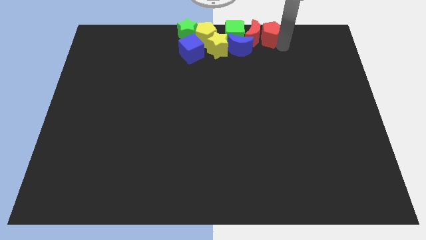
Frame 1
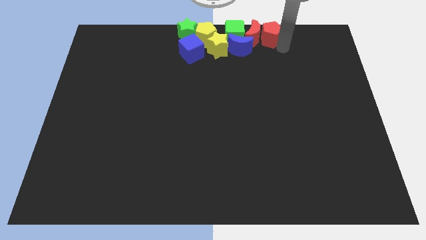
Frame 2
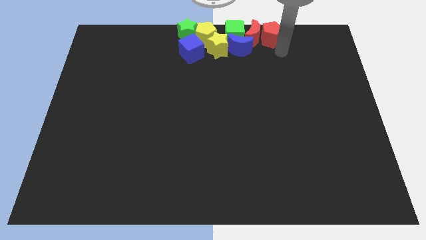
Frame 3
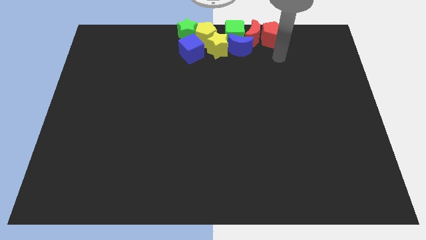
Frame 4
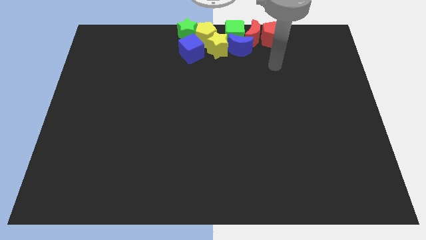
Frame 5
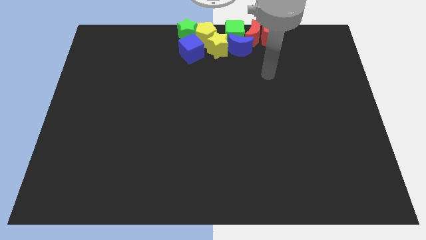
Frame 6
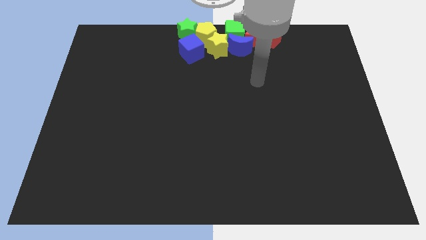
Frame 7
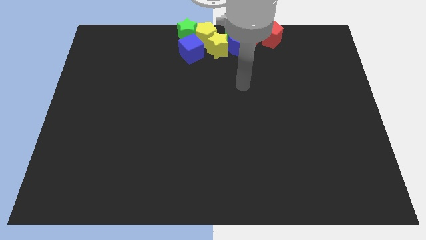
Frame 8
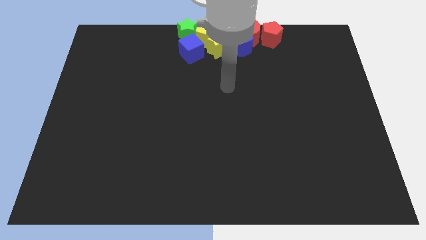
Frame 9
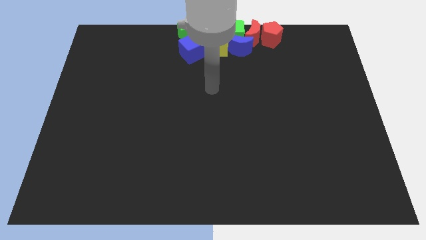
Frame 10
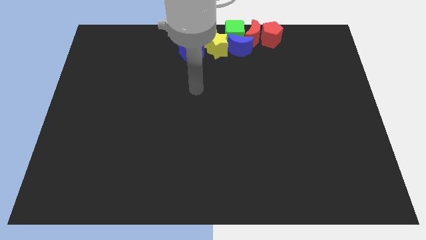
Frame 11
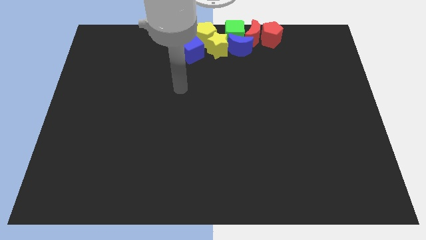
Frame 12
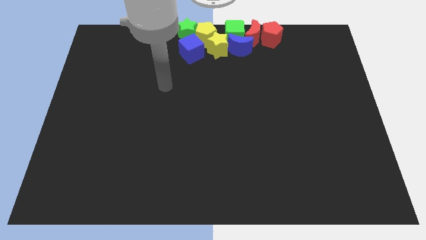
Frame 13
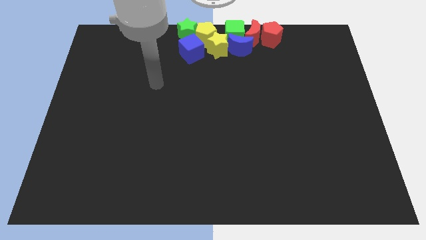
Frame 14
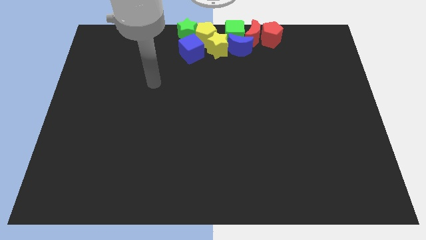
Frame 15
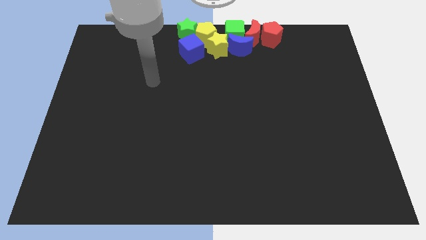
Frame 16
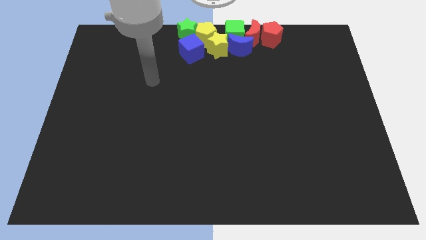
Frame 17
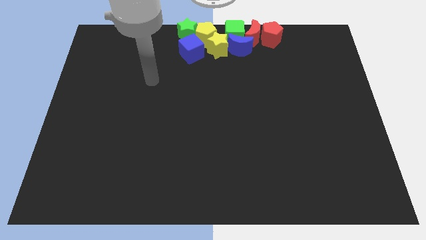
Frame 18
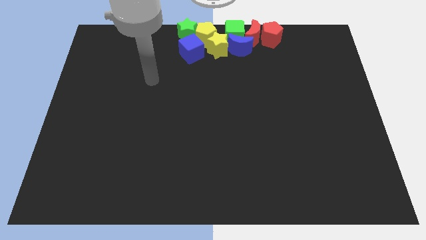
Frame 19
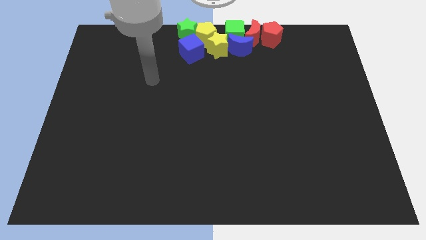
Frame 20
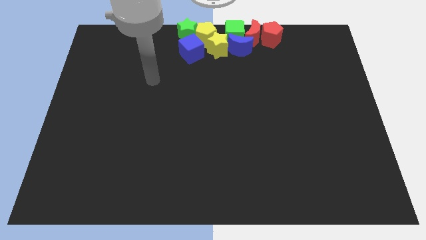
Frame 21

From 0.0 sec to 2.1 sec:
move your arm away from the red pentagon

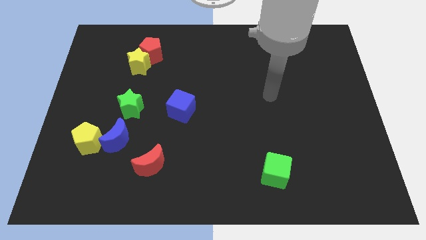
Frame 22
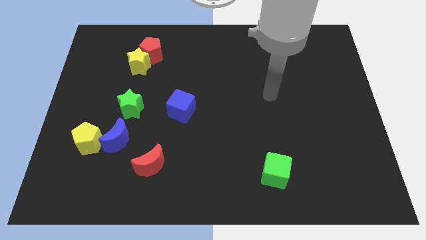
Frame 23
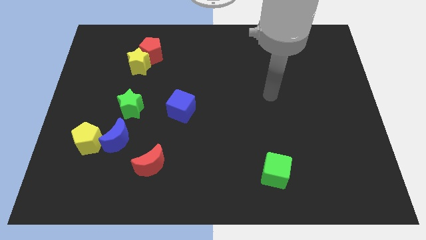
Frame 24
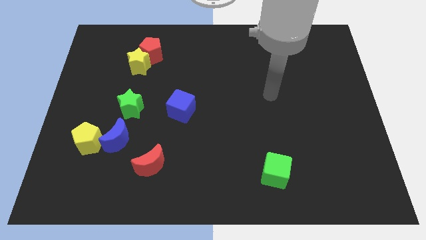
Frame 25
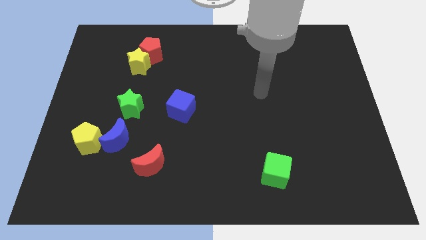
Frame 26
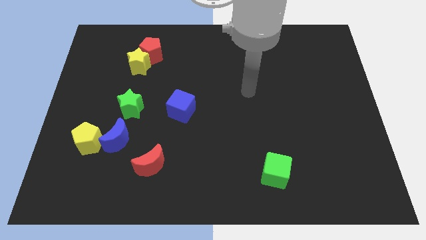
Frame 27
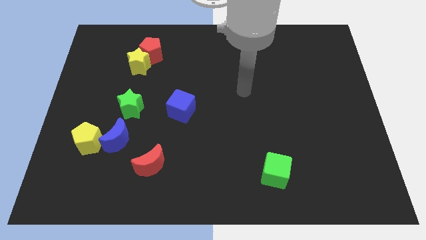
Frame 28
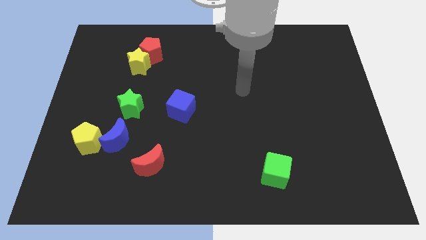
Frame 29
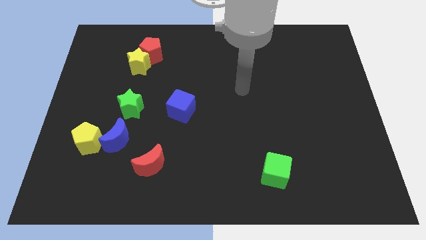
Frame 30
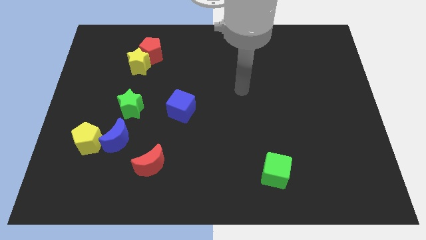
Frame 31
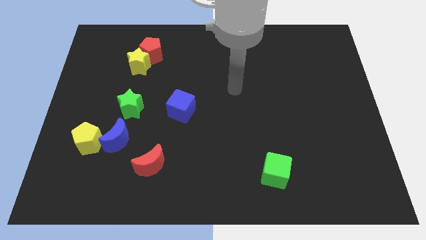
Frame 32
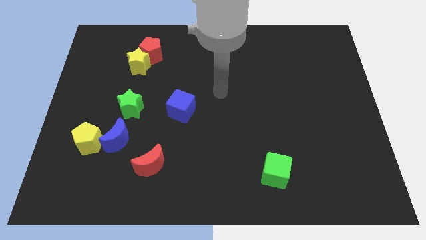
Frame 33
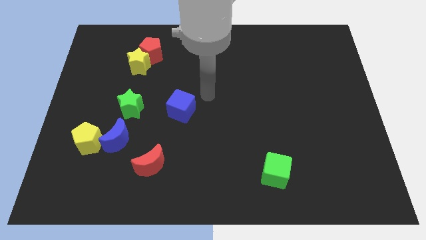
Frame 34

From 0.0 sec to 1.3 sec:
move your arm to the center of the board

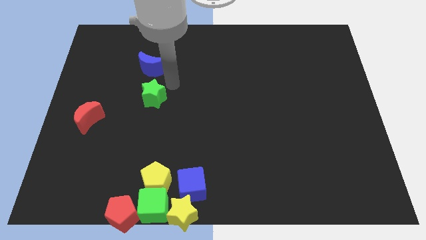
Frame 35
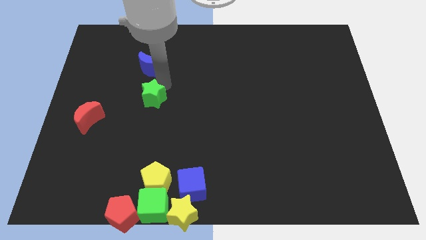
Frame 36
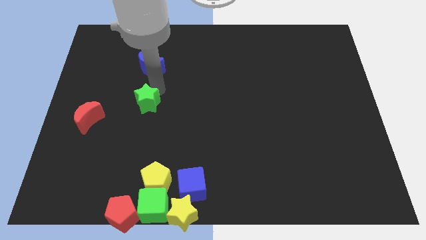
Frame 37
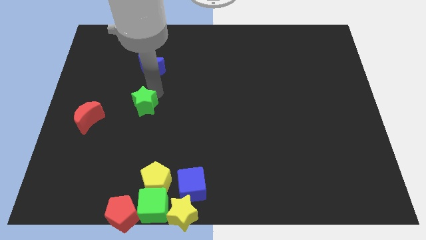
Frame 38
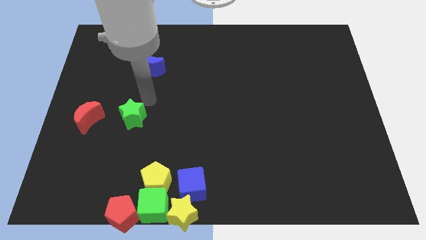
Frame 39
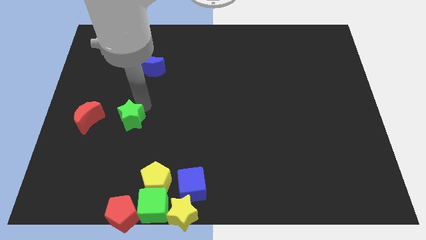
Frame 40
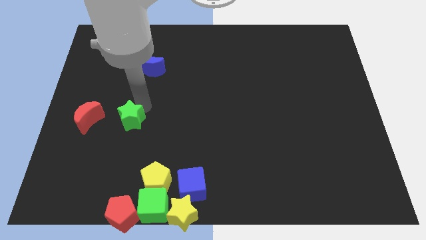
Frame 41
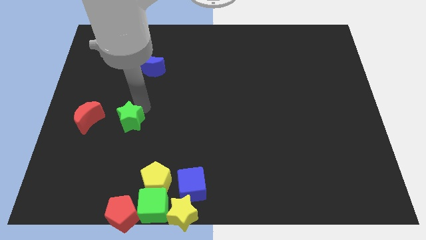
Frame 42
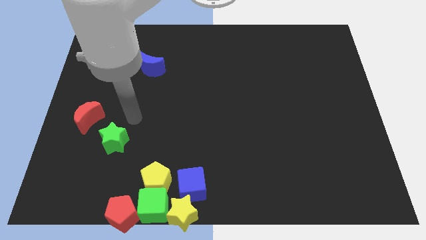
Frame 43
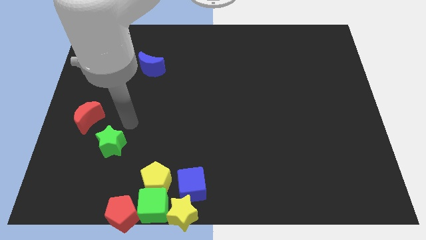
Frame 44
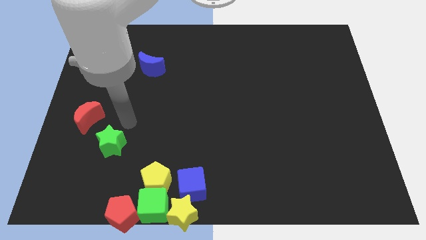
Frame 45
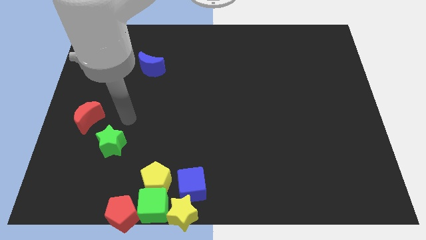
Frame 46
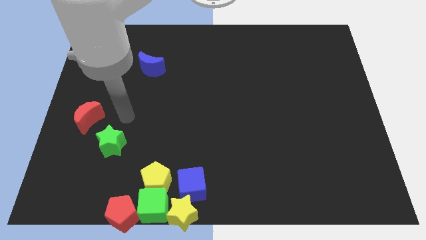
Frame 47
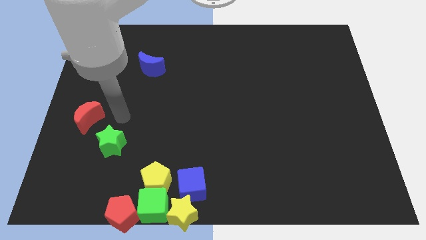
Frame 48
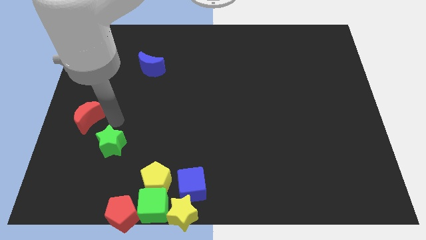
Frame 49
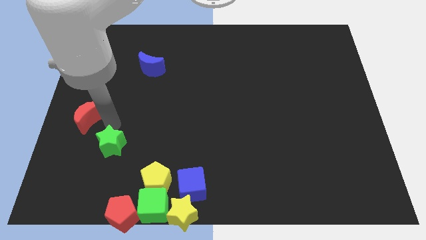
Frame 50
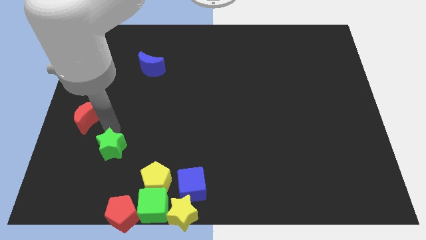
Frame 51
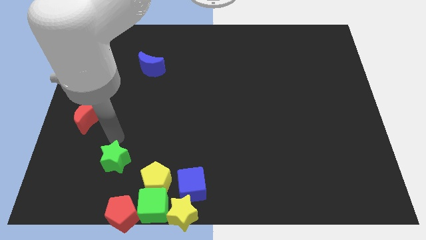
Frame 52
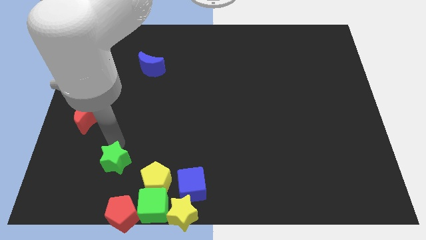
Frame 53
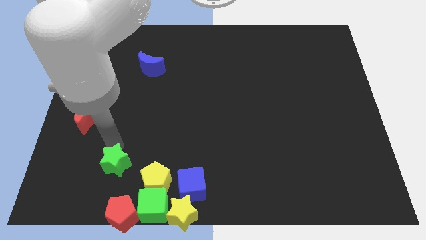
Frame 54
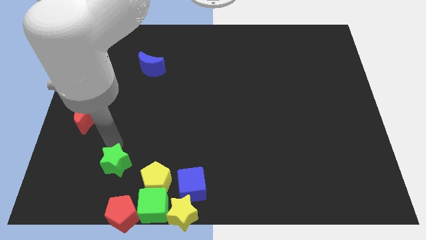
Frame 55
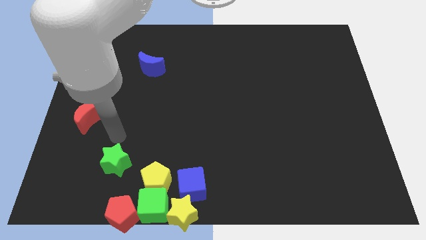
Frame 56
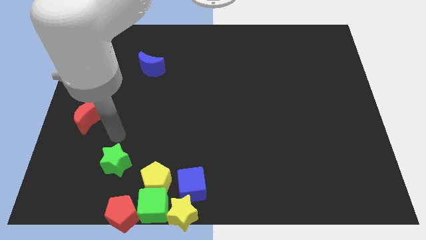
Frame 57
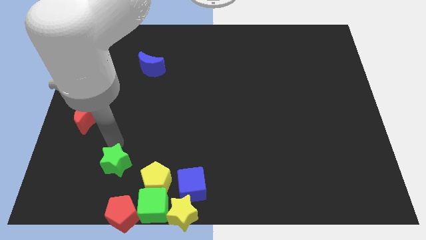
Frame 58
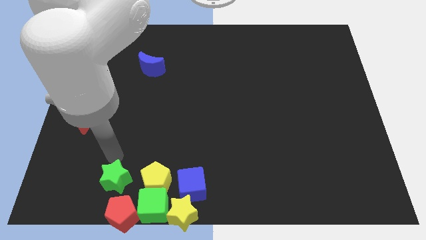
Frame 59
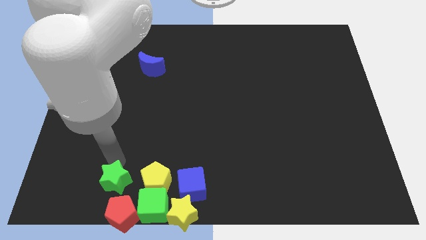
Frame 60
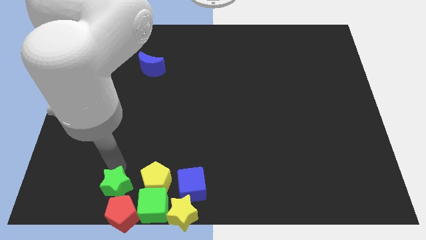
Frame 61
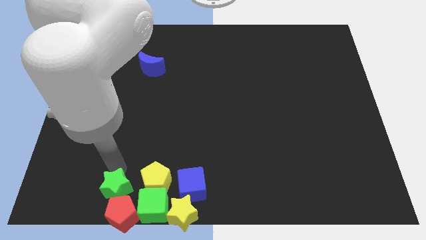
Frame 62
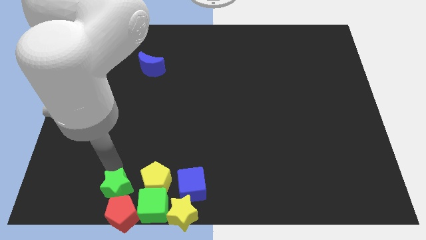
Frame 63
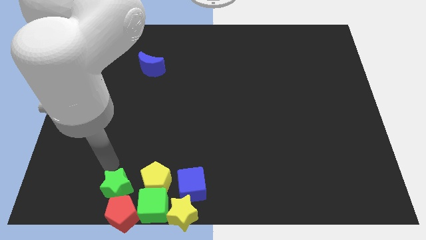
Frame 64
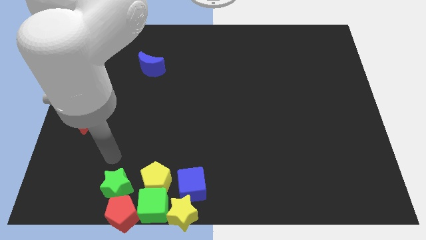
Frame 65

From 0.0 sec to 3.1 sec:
move the green star to the top side of the red pentagon

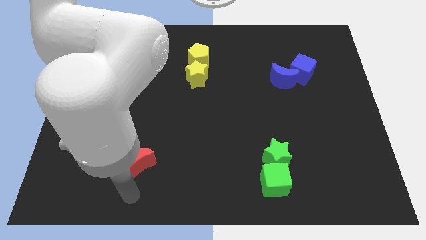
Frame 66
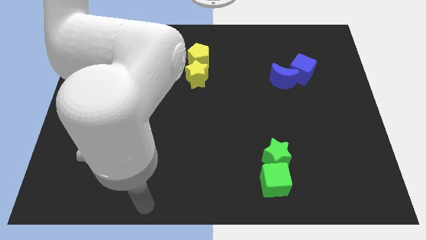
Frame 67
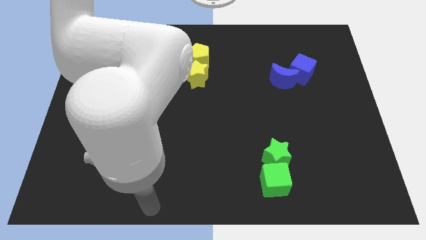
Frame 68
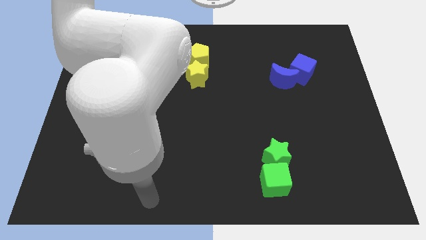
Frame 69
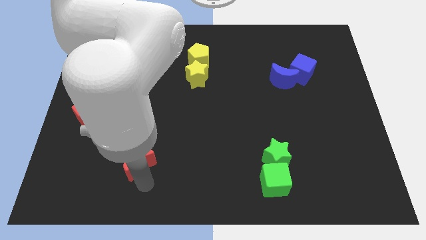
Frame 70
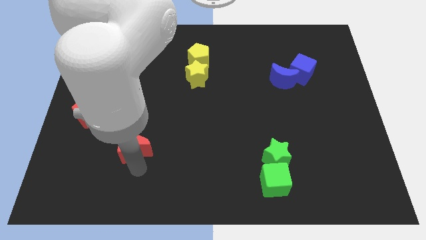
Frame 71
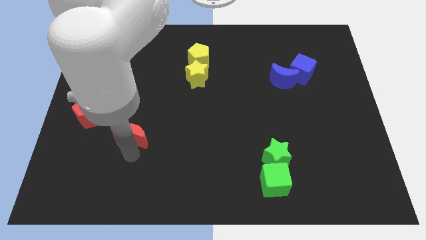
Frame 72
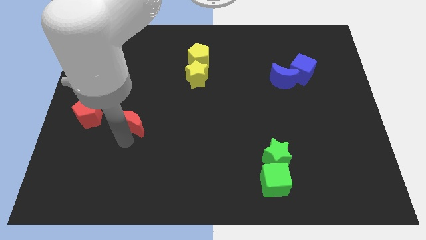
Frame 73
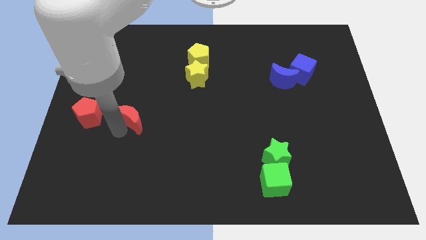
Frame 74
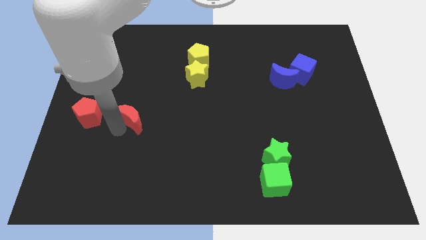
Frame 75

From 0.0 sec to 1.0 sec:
place red moon right to the red pentagon

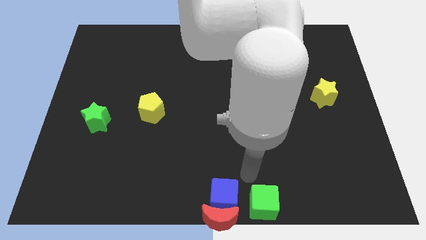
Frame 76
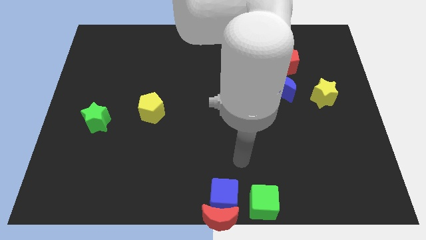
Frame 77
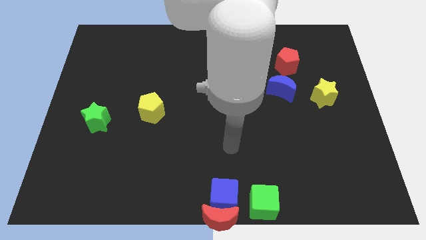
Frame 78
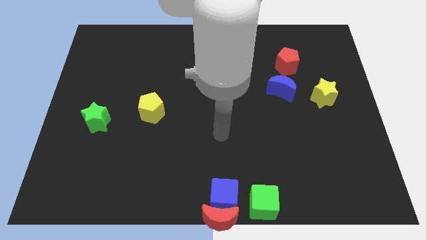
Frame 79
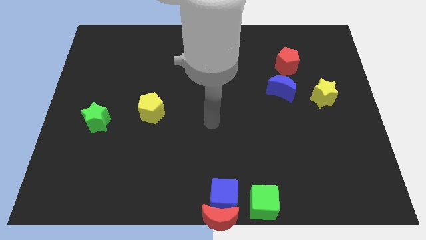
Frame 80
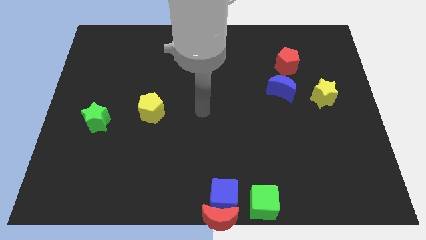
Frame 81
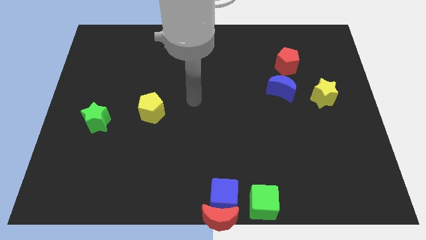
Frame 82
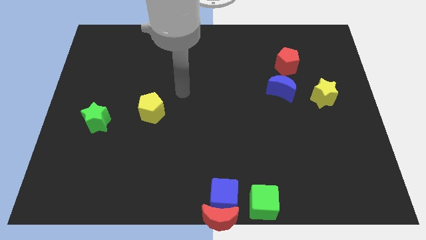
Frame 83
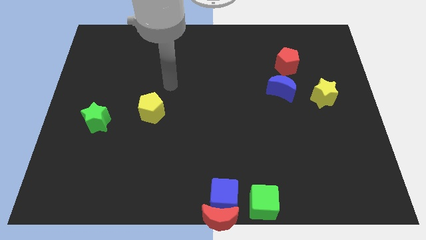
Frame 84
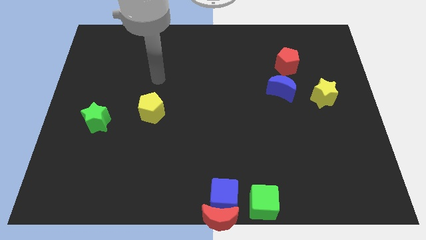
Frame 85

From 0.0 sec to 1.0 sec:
move the arm away from the green cube

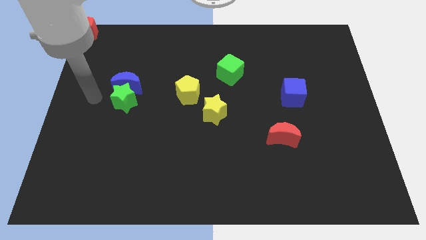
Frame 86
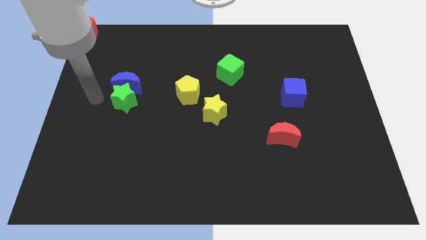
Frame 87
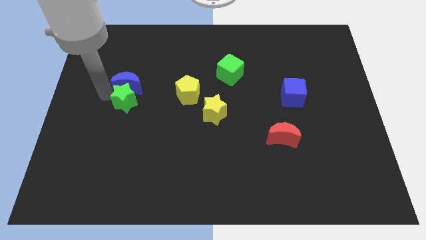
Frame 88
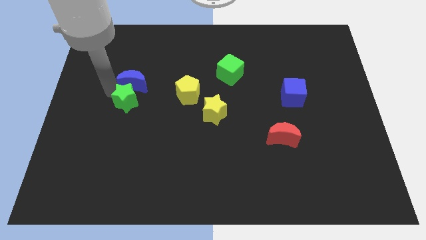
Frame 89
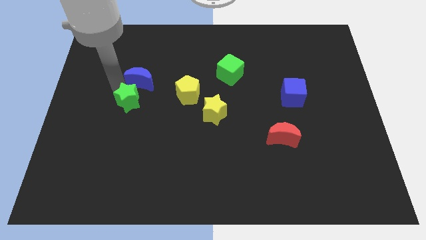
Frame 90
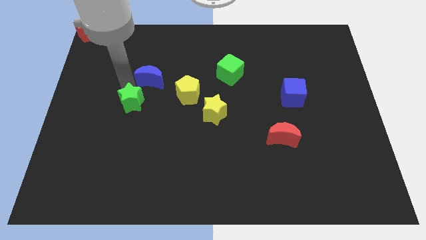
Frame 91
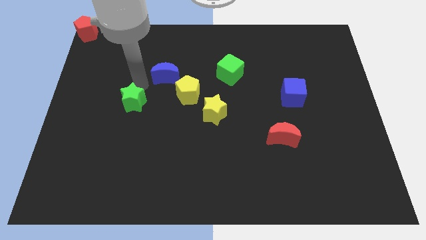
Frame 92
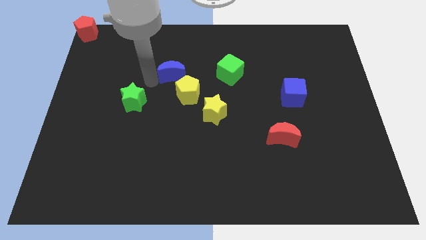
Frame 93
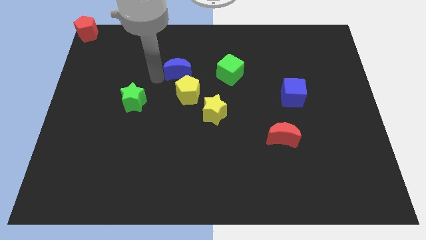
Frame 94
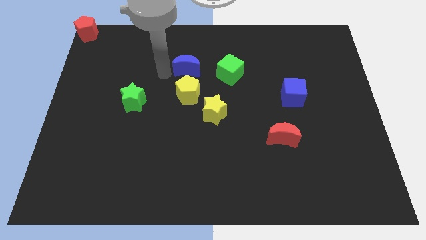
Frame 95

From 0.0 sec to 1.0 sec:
separate the blue moon from green star
